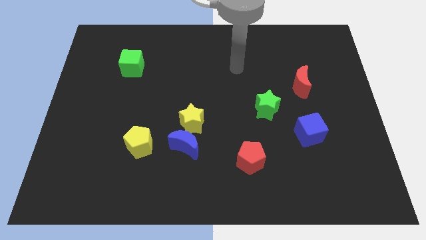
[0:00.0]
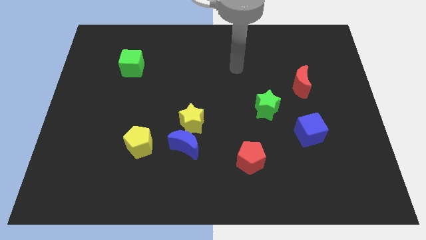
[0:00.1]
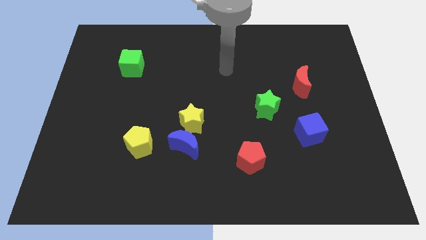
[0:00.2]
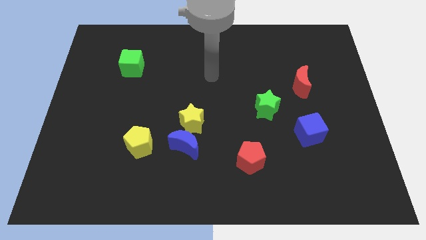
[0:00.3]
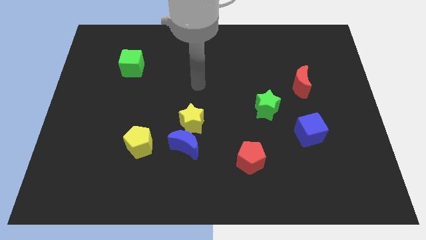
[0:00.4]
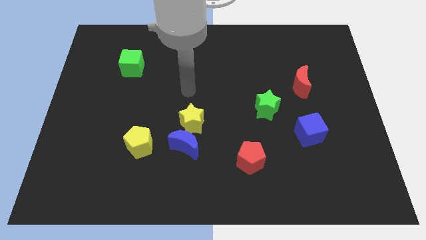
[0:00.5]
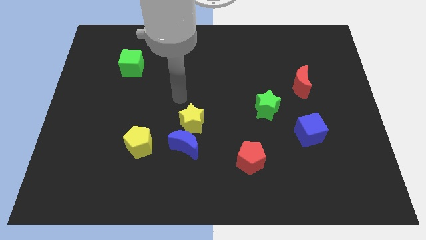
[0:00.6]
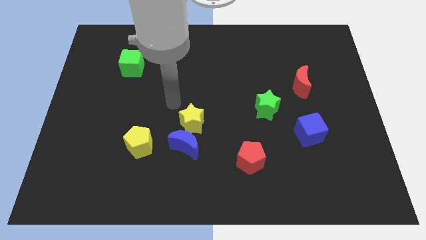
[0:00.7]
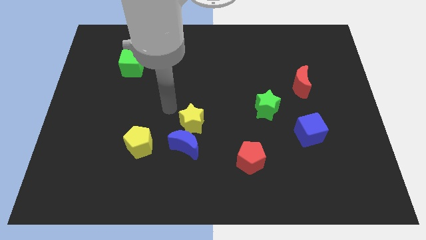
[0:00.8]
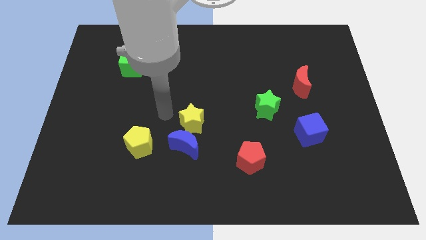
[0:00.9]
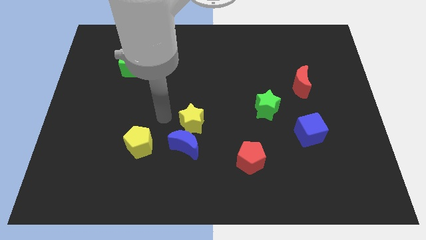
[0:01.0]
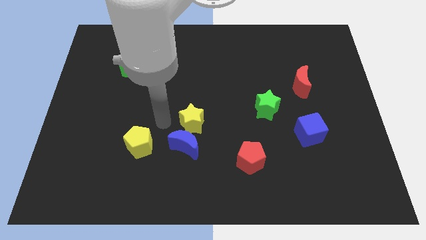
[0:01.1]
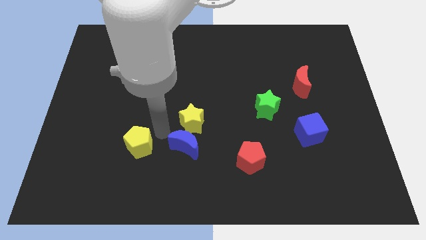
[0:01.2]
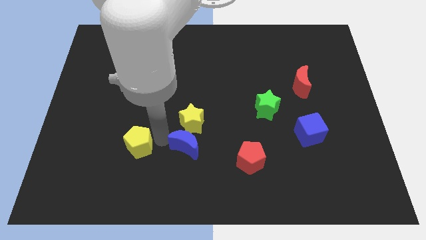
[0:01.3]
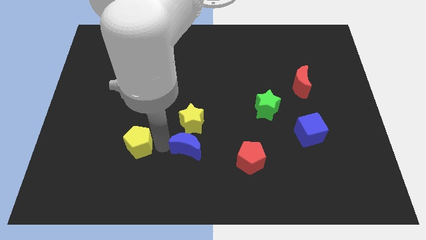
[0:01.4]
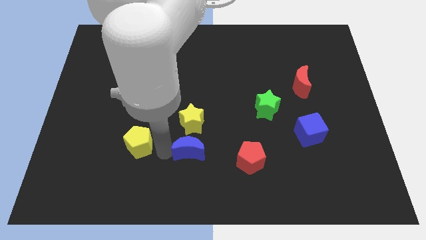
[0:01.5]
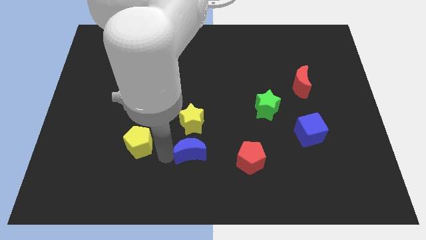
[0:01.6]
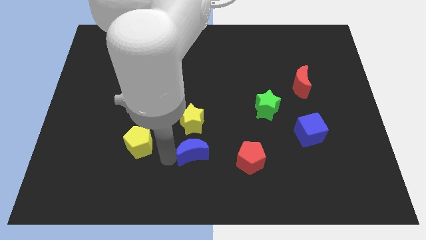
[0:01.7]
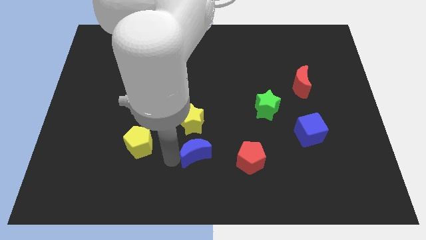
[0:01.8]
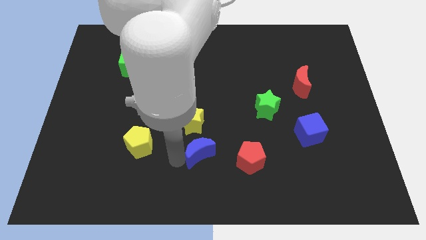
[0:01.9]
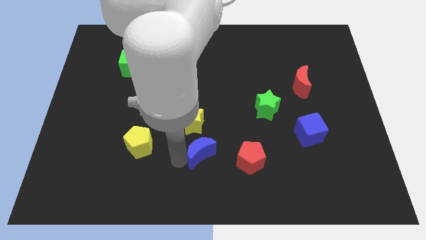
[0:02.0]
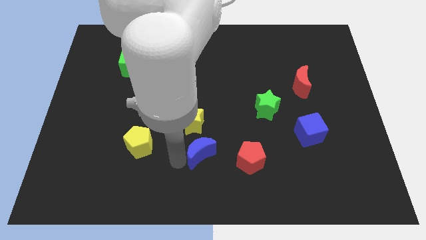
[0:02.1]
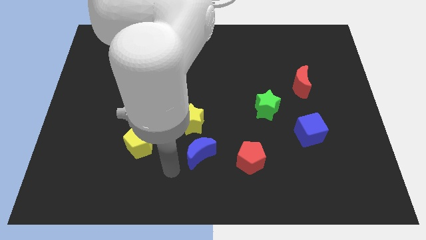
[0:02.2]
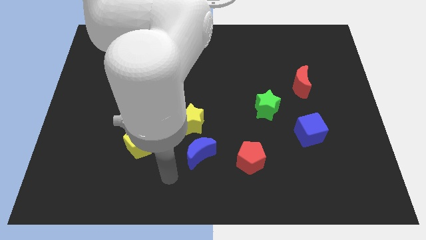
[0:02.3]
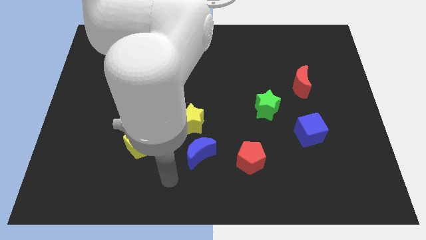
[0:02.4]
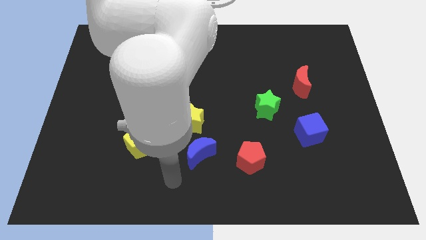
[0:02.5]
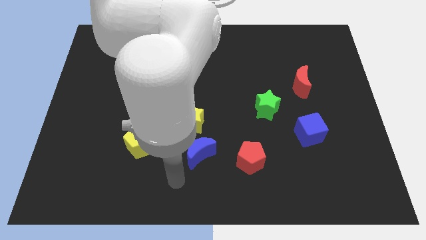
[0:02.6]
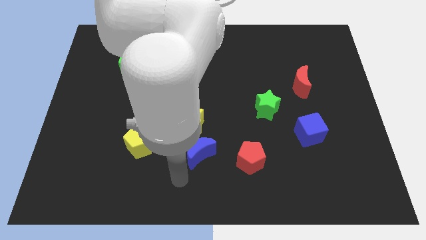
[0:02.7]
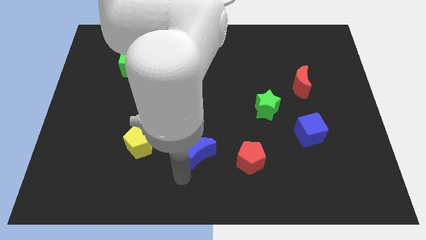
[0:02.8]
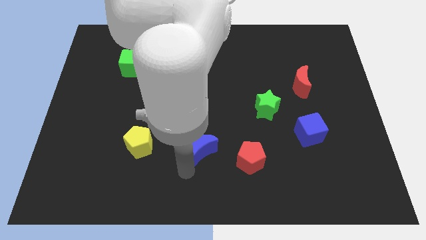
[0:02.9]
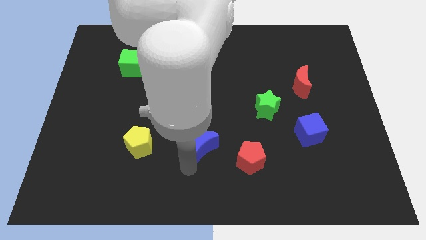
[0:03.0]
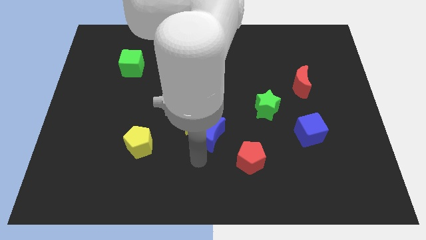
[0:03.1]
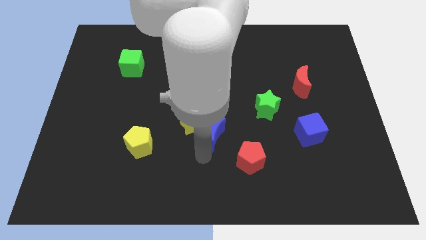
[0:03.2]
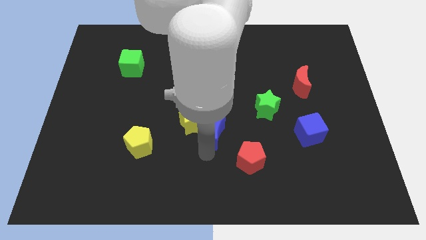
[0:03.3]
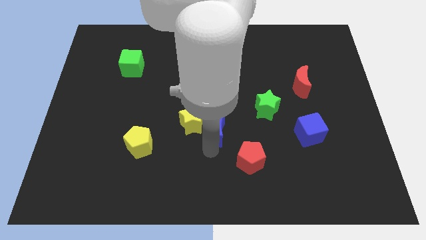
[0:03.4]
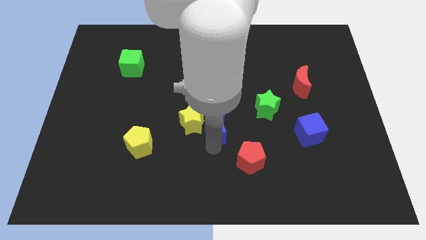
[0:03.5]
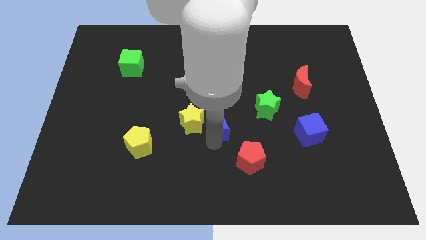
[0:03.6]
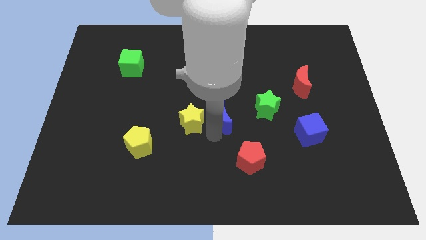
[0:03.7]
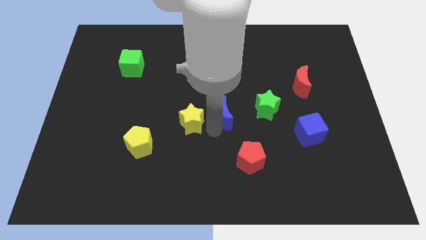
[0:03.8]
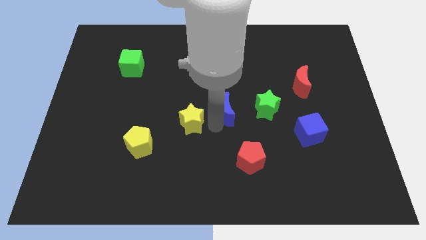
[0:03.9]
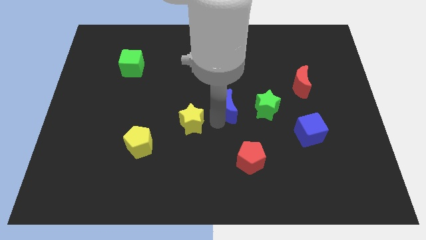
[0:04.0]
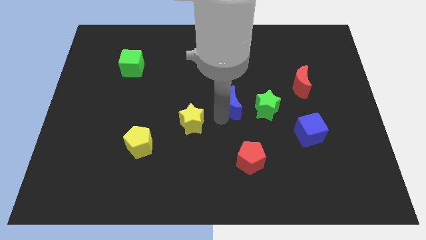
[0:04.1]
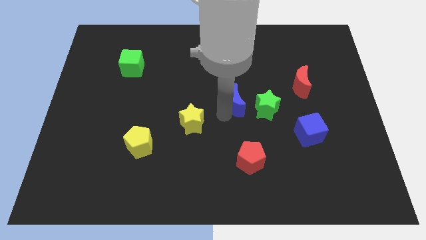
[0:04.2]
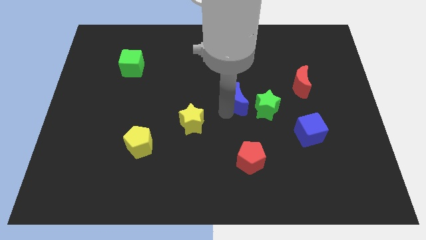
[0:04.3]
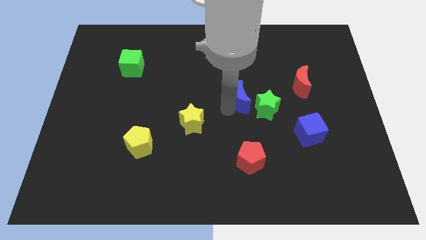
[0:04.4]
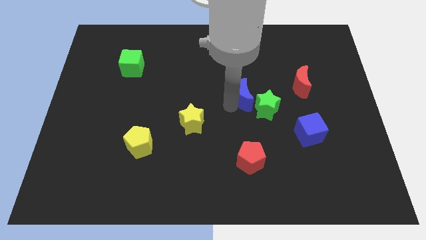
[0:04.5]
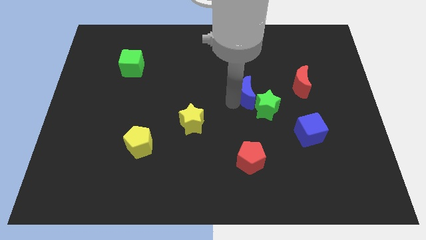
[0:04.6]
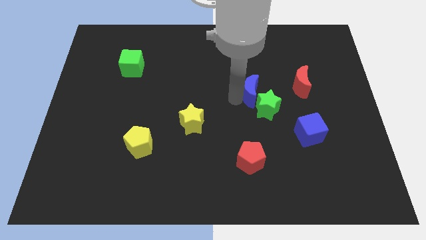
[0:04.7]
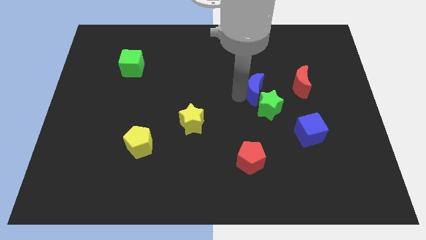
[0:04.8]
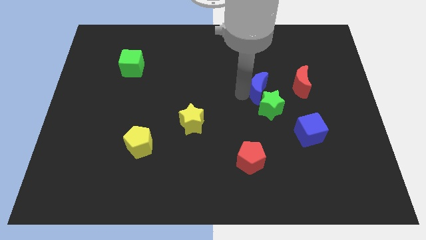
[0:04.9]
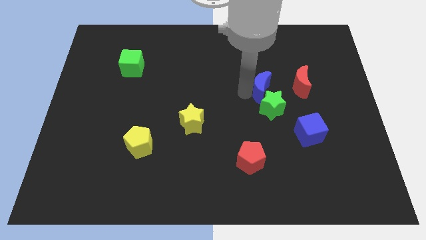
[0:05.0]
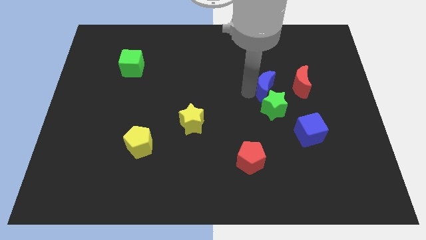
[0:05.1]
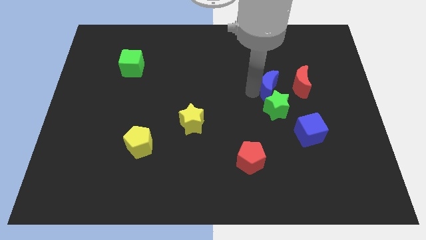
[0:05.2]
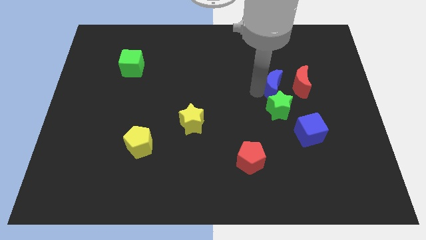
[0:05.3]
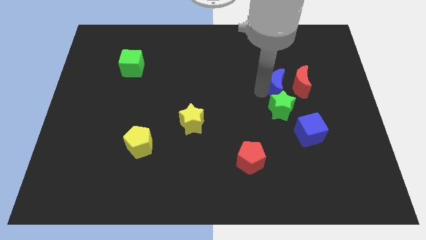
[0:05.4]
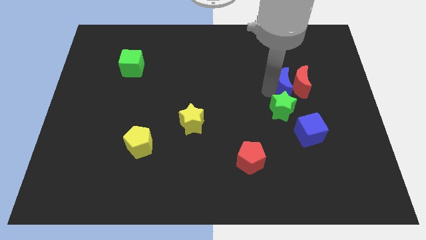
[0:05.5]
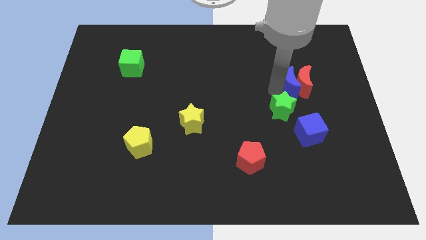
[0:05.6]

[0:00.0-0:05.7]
slide the blue moon to the red moon
